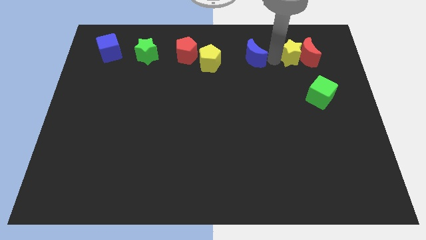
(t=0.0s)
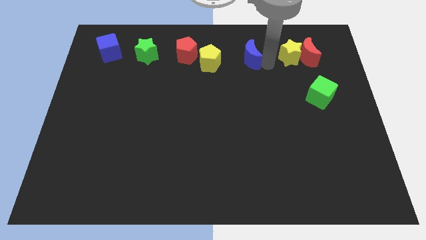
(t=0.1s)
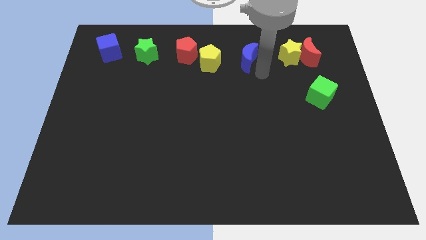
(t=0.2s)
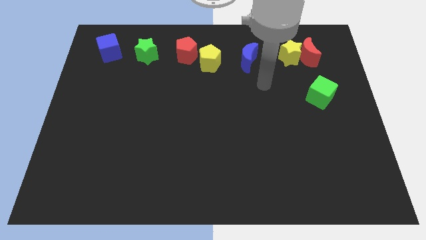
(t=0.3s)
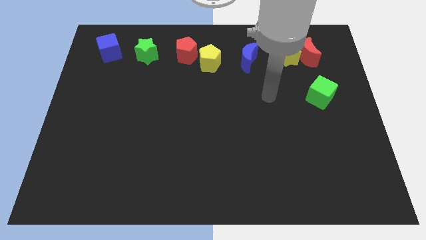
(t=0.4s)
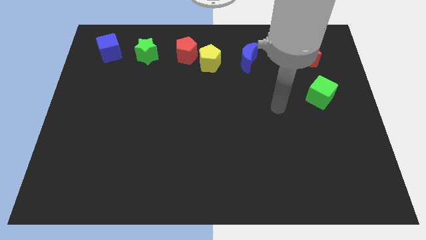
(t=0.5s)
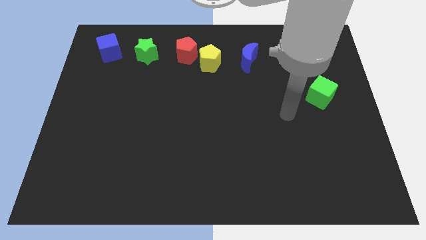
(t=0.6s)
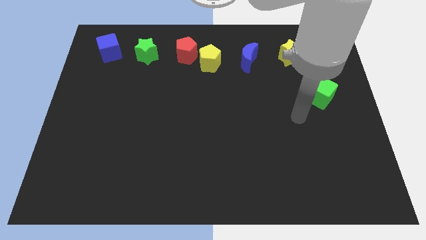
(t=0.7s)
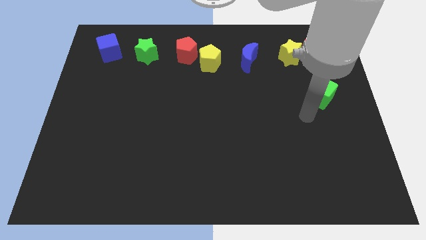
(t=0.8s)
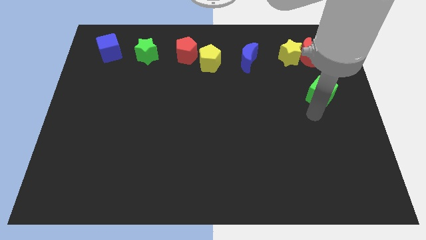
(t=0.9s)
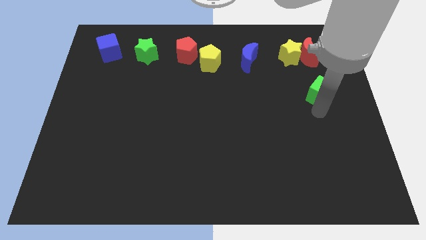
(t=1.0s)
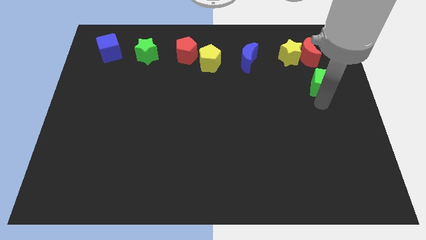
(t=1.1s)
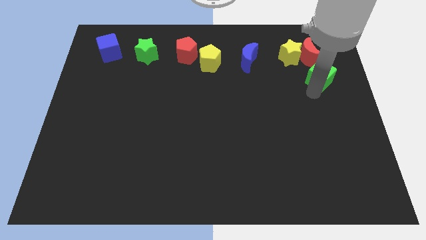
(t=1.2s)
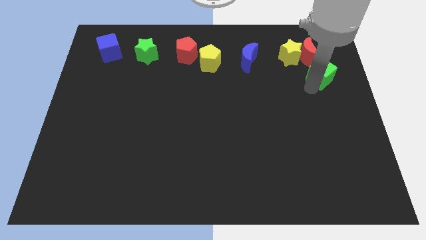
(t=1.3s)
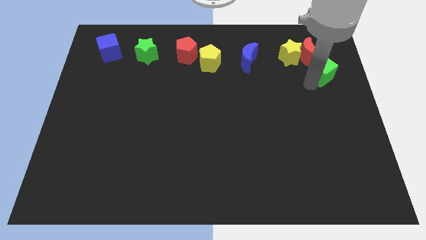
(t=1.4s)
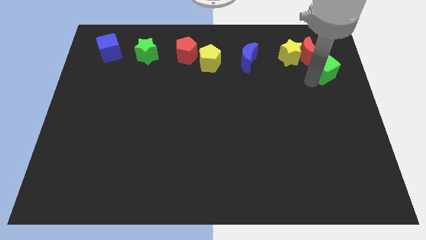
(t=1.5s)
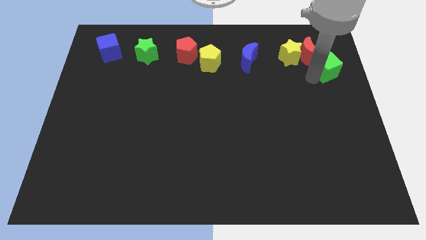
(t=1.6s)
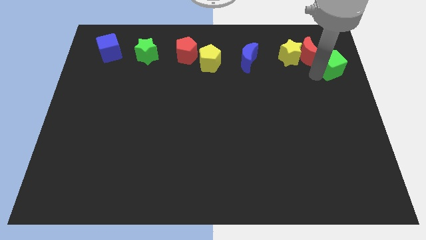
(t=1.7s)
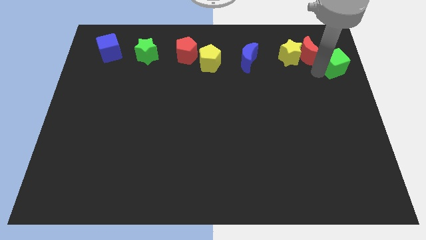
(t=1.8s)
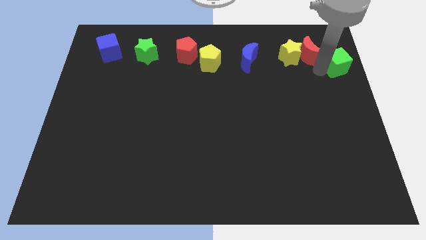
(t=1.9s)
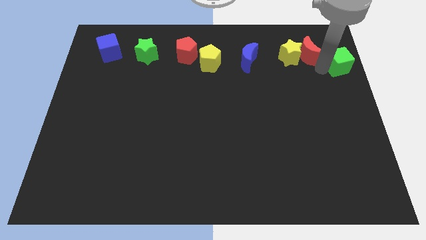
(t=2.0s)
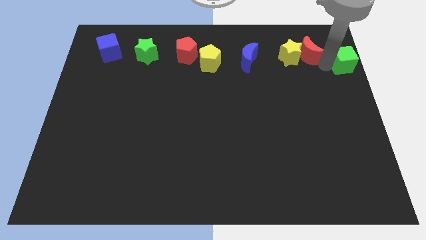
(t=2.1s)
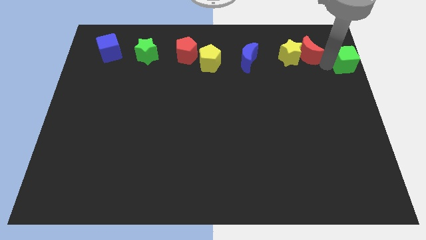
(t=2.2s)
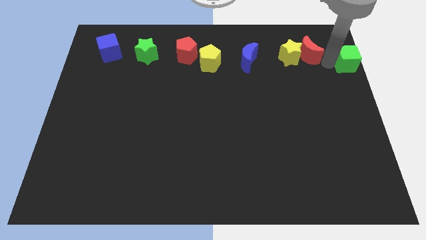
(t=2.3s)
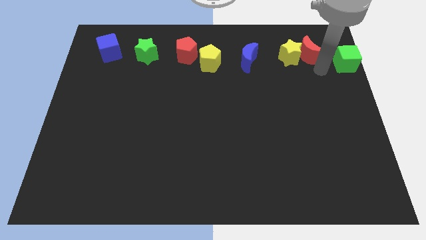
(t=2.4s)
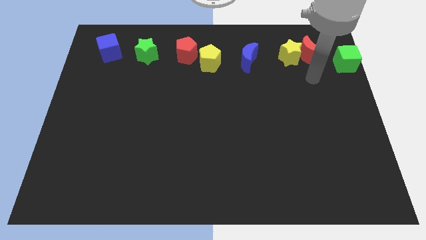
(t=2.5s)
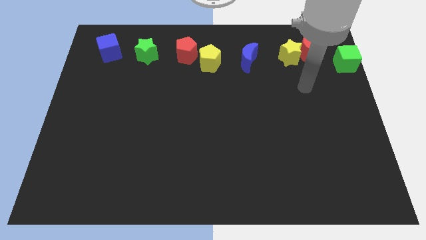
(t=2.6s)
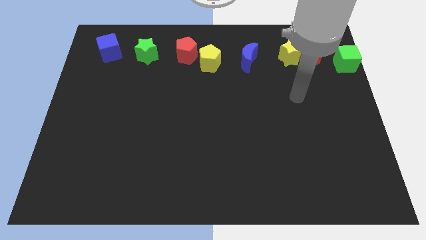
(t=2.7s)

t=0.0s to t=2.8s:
move the green cube to the center right of the board

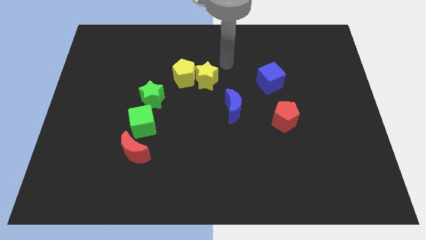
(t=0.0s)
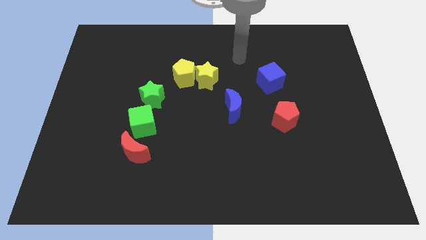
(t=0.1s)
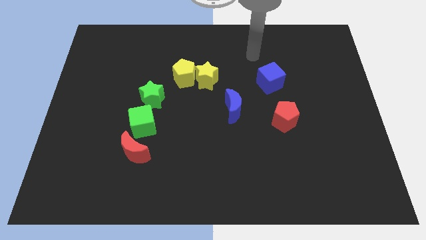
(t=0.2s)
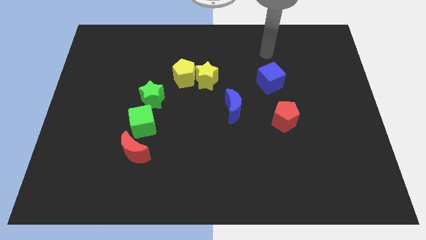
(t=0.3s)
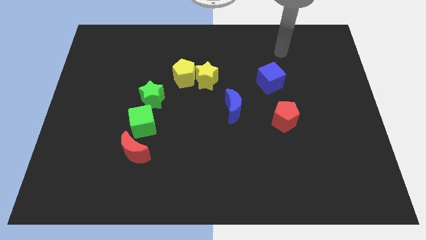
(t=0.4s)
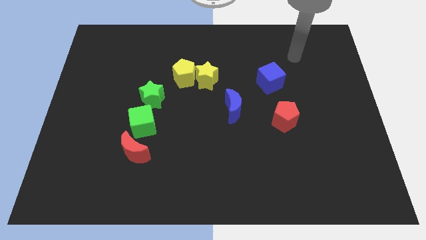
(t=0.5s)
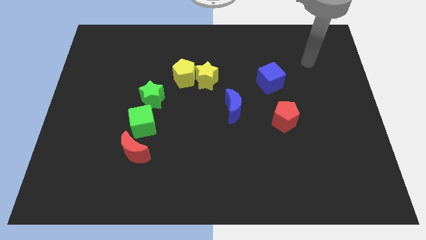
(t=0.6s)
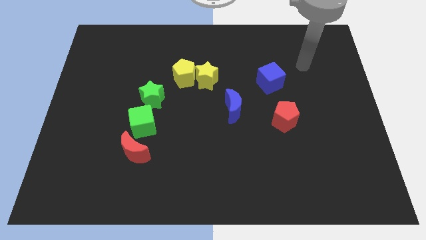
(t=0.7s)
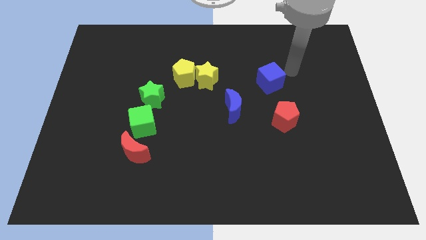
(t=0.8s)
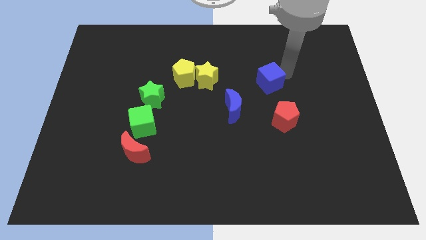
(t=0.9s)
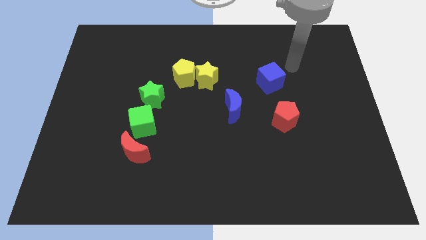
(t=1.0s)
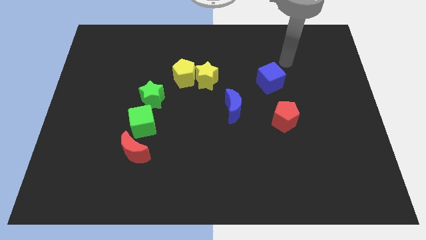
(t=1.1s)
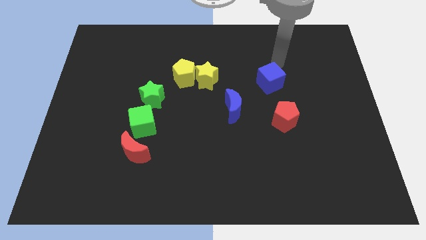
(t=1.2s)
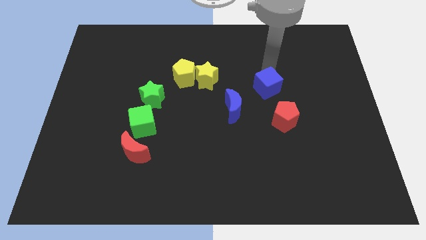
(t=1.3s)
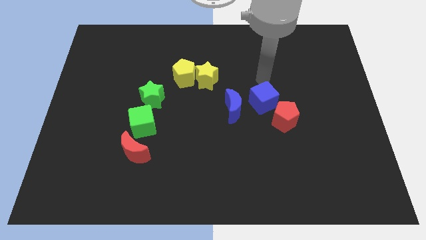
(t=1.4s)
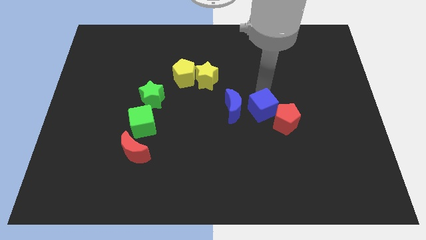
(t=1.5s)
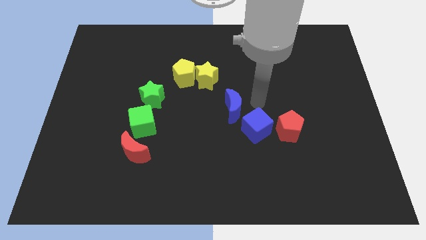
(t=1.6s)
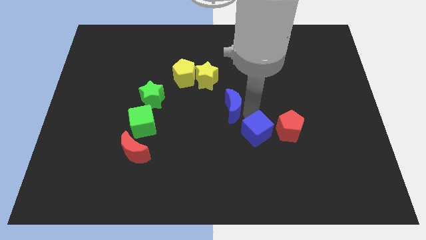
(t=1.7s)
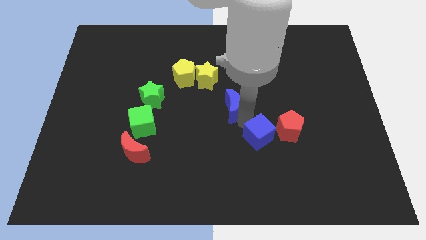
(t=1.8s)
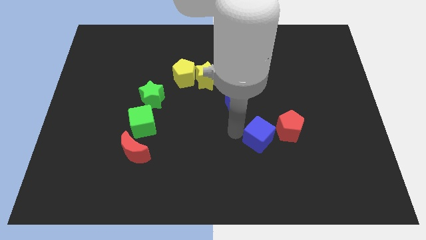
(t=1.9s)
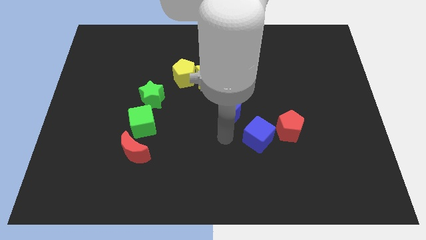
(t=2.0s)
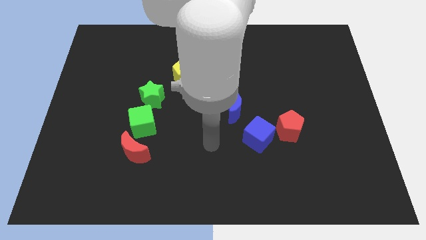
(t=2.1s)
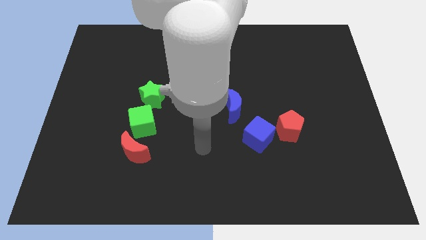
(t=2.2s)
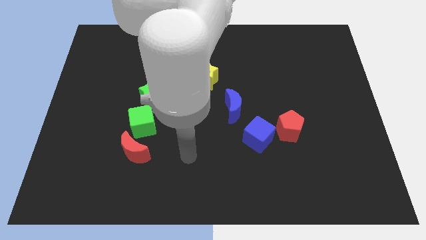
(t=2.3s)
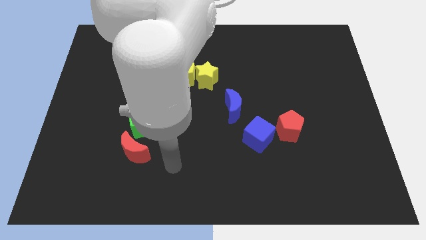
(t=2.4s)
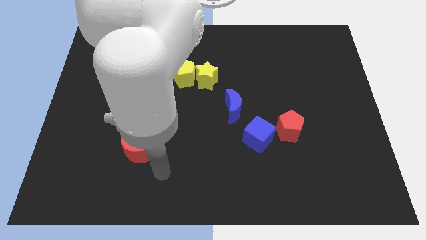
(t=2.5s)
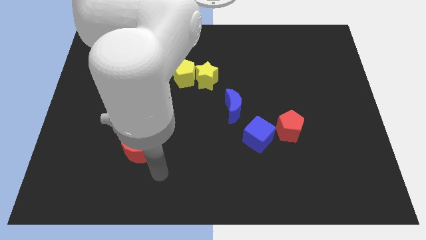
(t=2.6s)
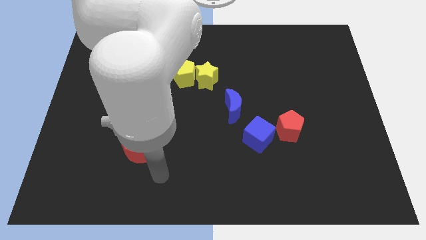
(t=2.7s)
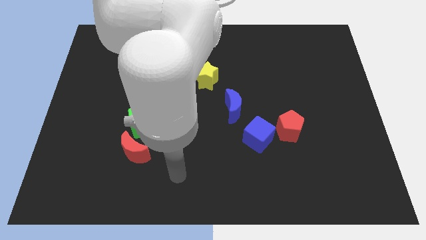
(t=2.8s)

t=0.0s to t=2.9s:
move the blue cube close to the red pentagon

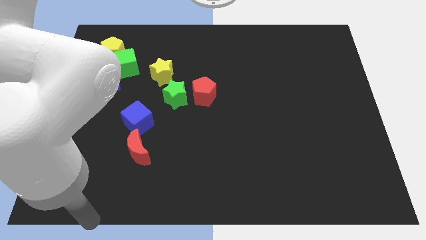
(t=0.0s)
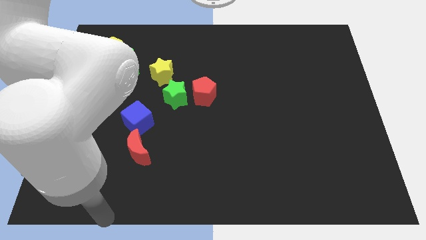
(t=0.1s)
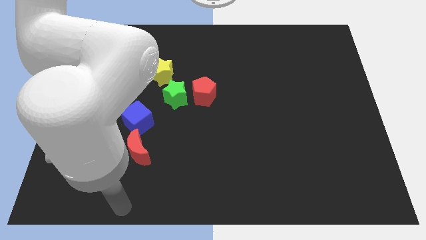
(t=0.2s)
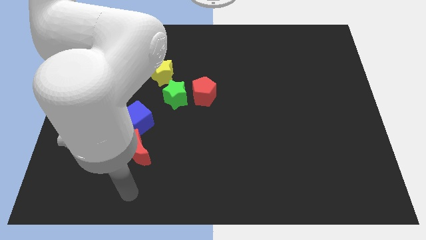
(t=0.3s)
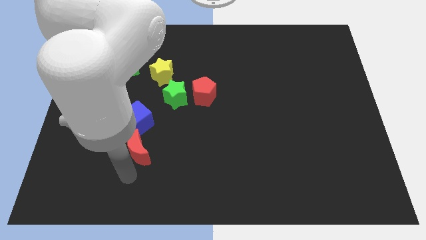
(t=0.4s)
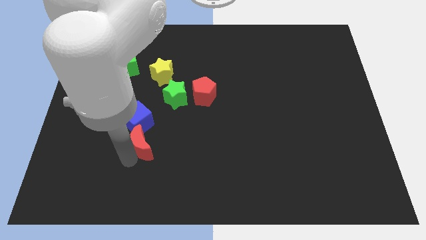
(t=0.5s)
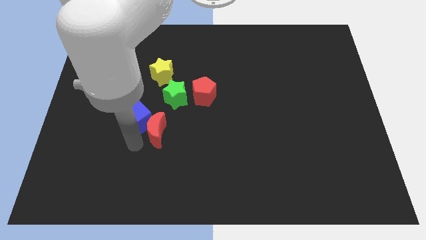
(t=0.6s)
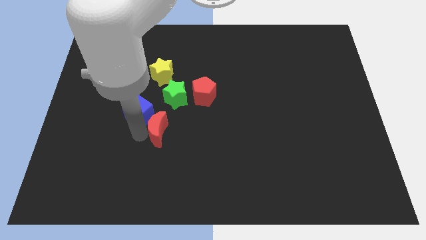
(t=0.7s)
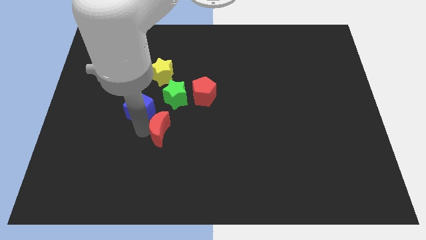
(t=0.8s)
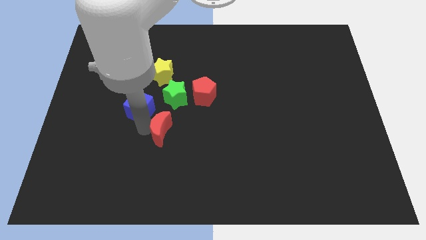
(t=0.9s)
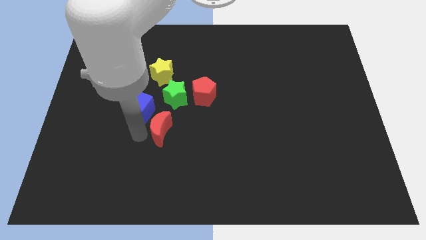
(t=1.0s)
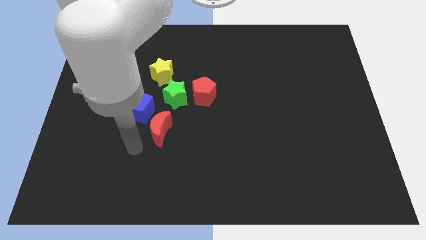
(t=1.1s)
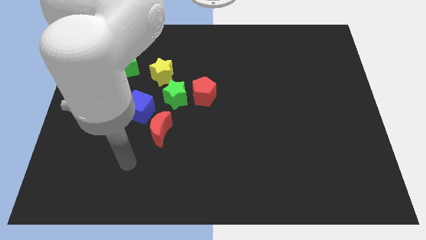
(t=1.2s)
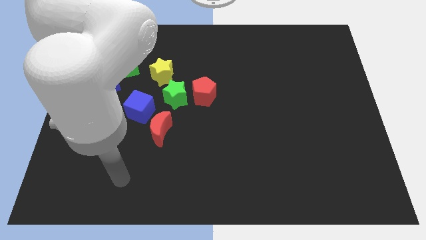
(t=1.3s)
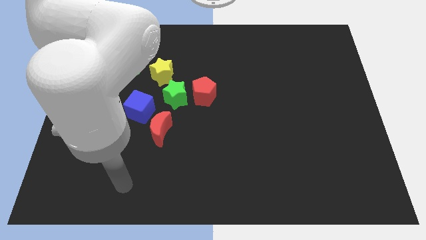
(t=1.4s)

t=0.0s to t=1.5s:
separate the red moon from the blue cube

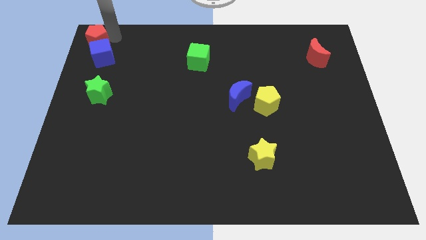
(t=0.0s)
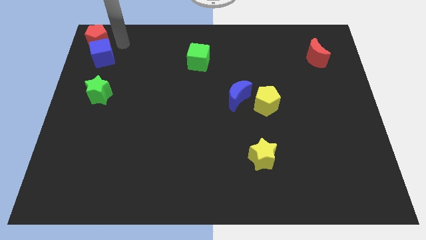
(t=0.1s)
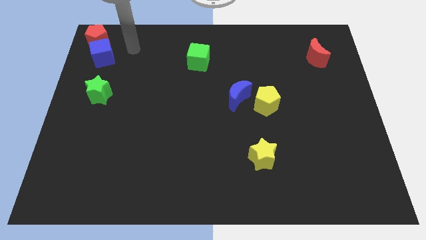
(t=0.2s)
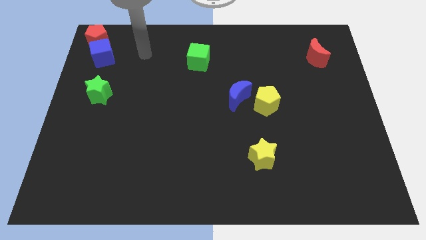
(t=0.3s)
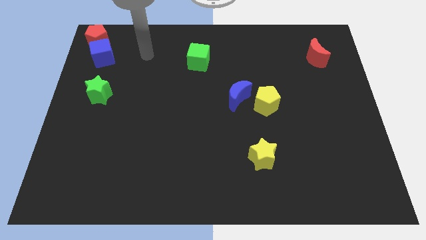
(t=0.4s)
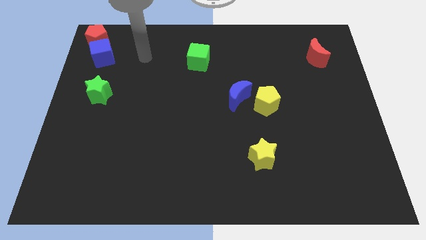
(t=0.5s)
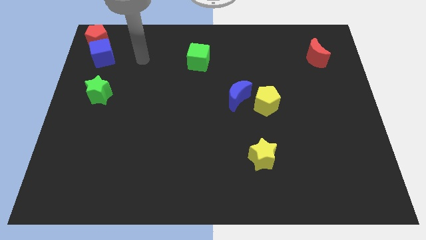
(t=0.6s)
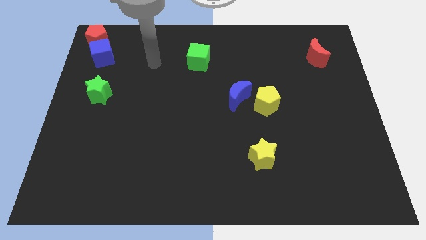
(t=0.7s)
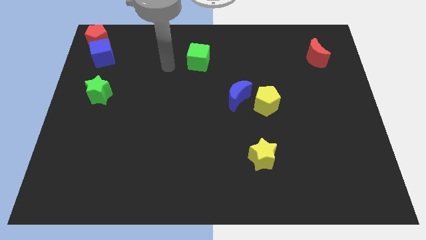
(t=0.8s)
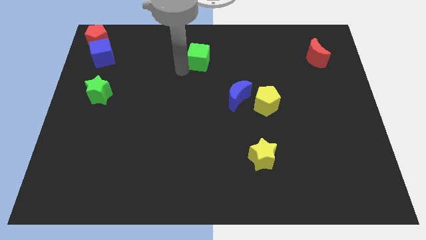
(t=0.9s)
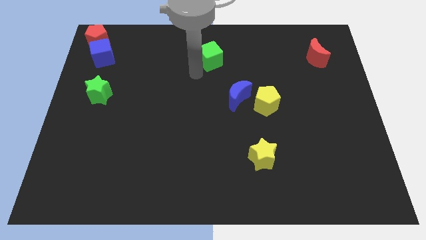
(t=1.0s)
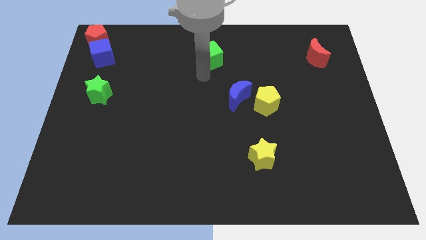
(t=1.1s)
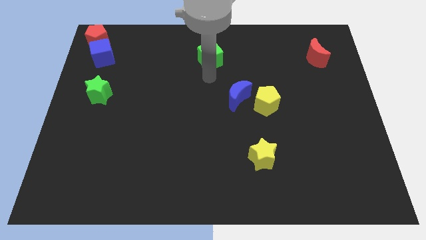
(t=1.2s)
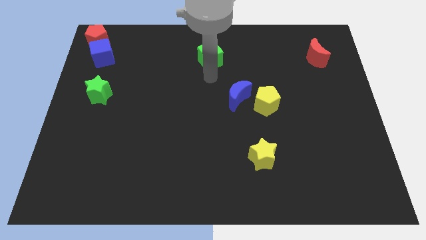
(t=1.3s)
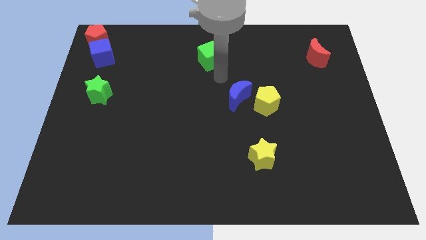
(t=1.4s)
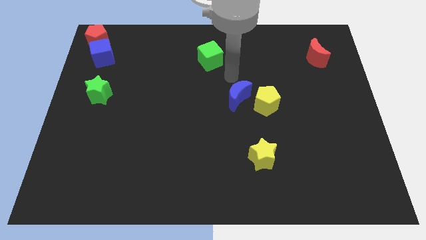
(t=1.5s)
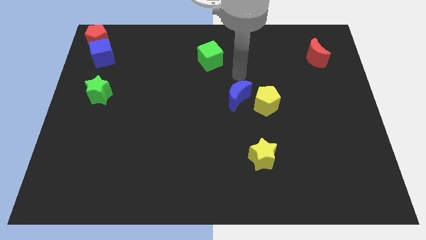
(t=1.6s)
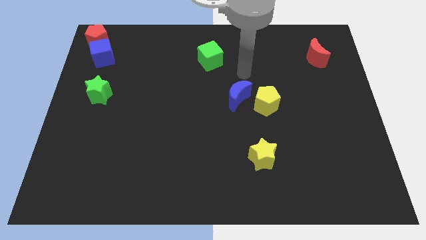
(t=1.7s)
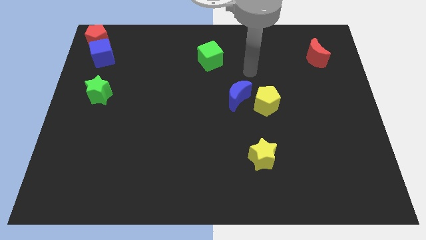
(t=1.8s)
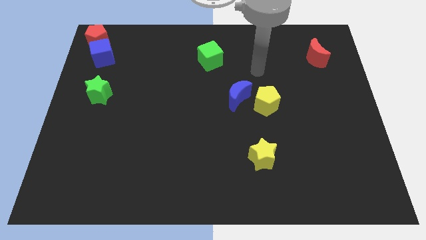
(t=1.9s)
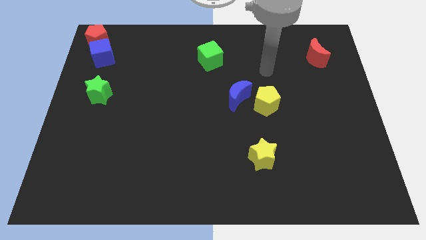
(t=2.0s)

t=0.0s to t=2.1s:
place the arm at the top of the blue crescent
